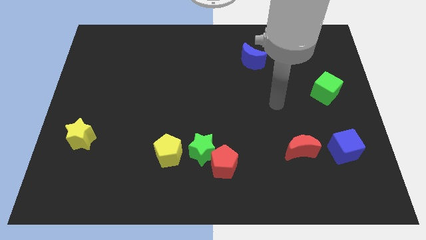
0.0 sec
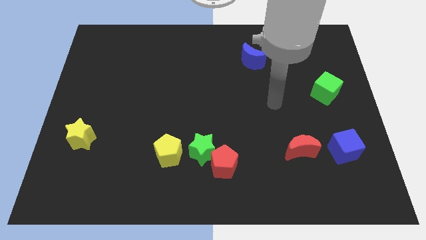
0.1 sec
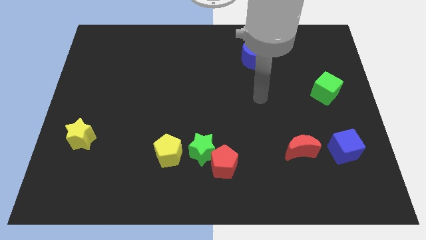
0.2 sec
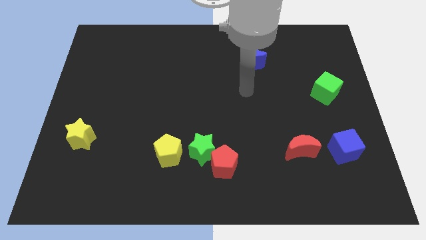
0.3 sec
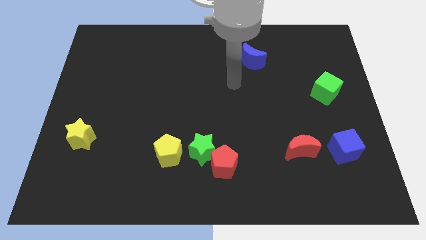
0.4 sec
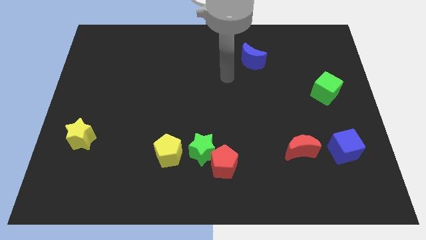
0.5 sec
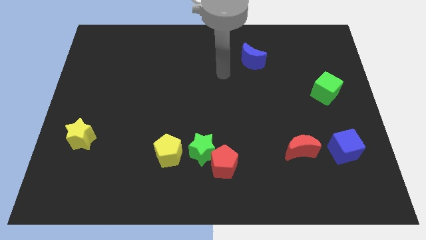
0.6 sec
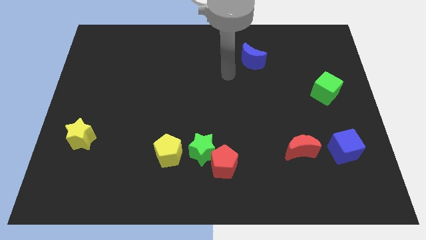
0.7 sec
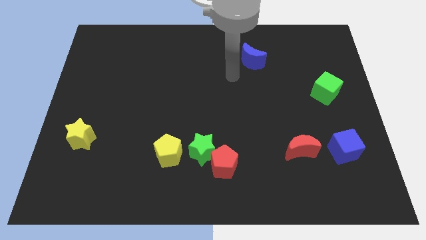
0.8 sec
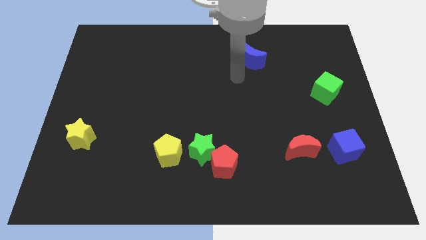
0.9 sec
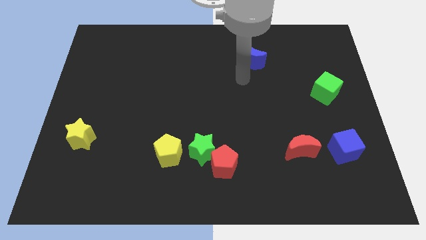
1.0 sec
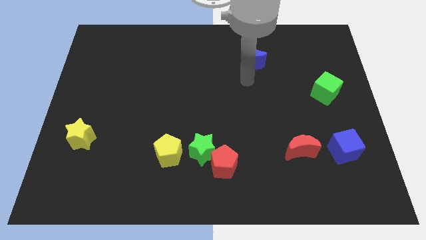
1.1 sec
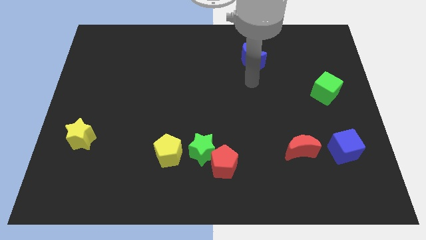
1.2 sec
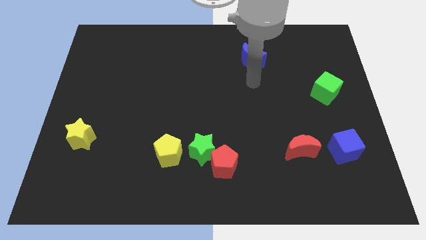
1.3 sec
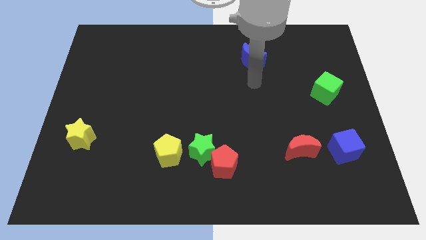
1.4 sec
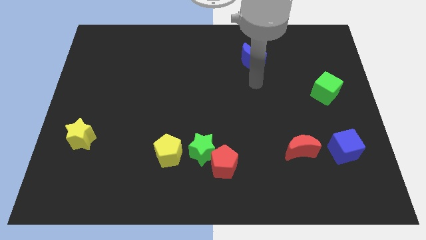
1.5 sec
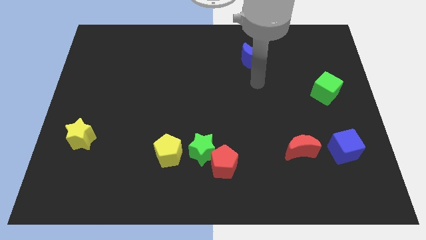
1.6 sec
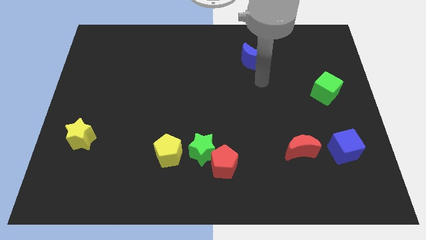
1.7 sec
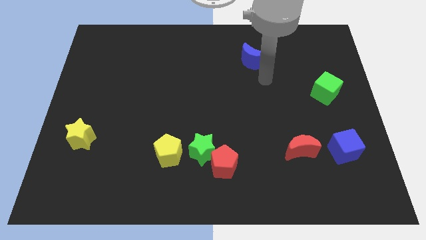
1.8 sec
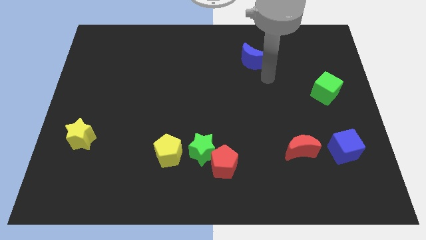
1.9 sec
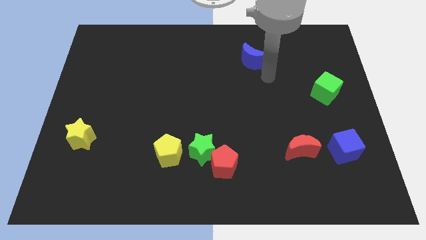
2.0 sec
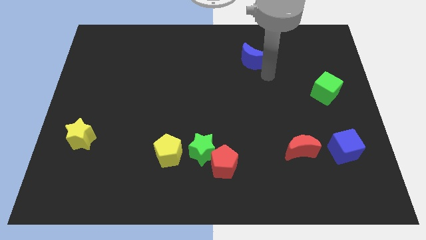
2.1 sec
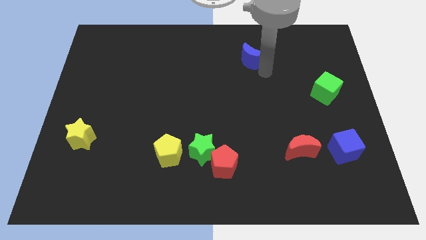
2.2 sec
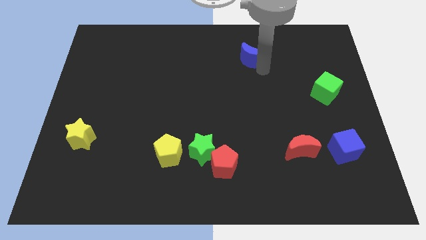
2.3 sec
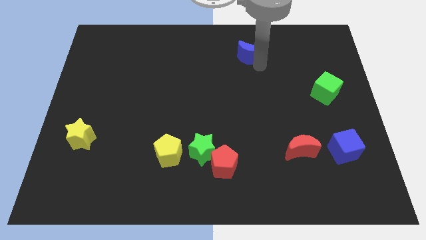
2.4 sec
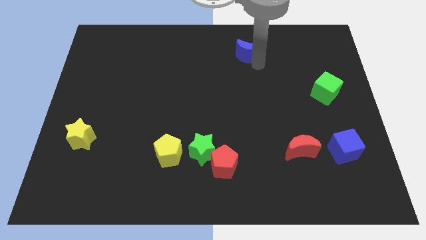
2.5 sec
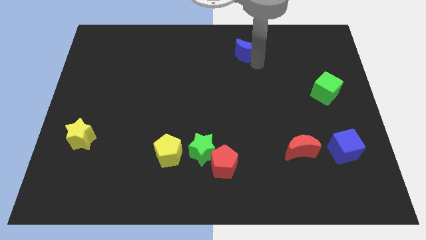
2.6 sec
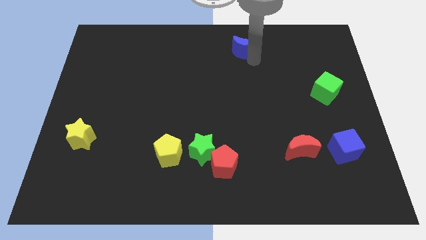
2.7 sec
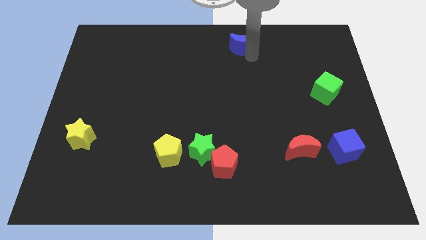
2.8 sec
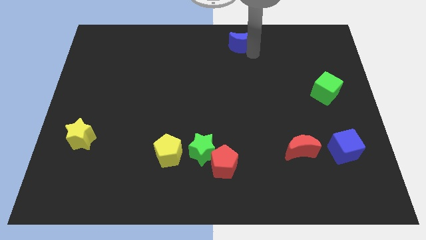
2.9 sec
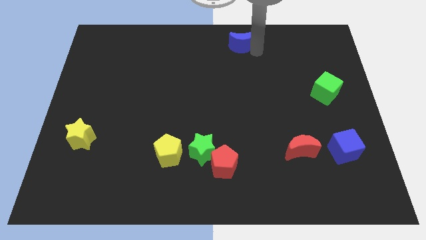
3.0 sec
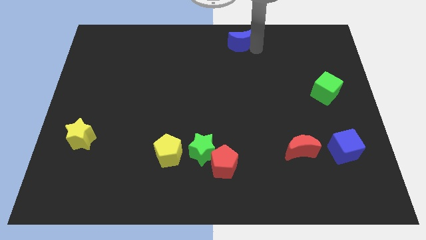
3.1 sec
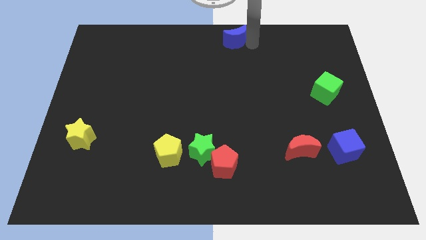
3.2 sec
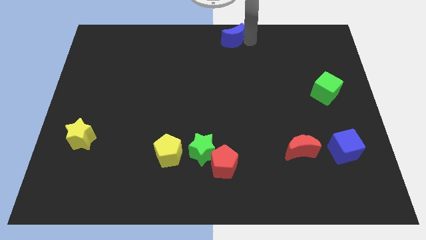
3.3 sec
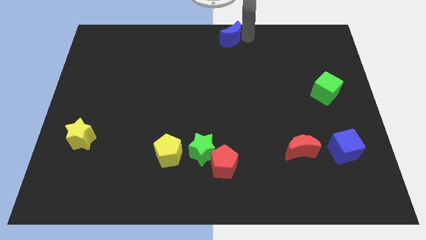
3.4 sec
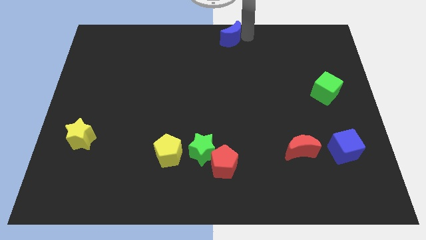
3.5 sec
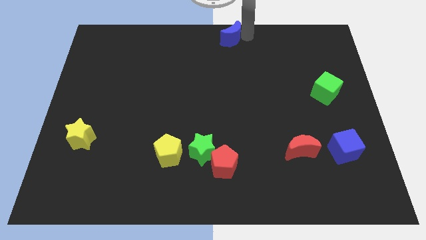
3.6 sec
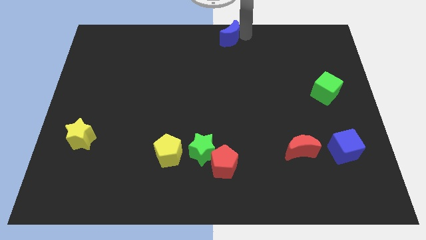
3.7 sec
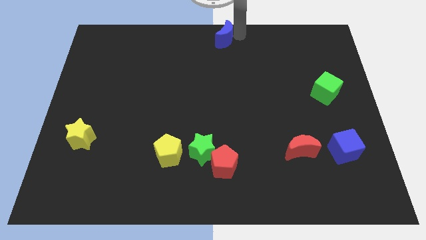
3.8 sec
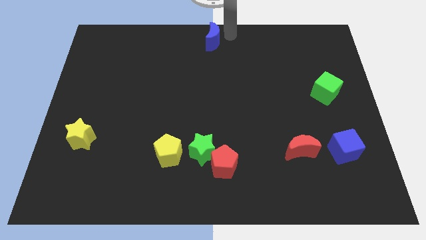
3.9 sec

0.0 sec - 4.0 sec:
move the blue moon towards the top center of the board

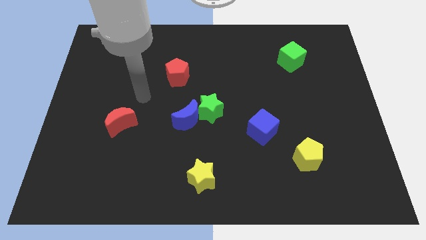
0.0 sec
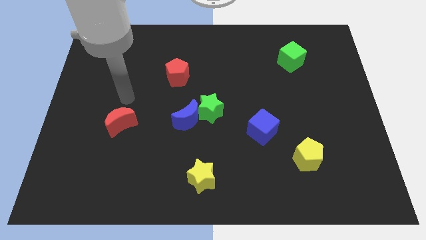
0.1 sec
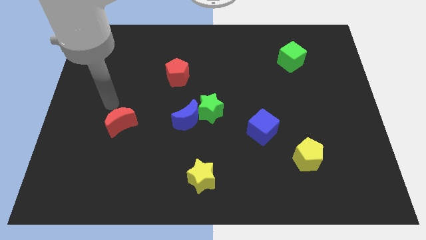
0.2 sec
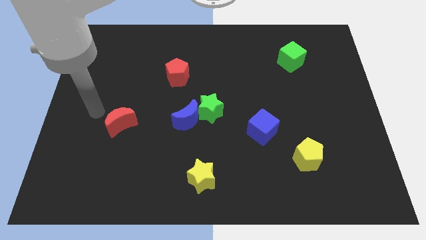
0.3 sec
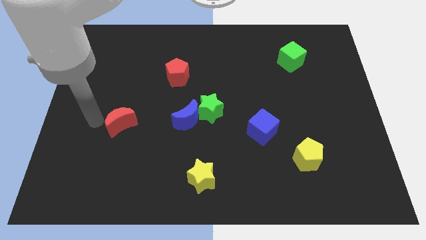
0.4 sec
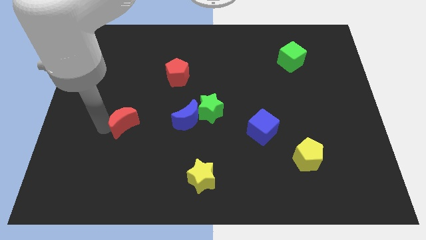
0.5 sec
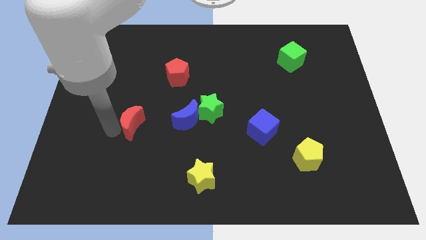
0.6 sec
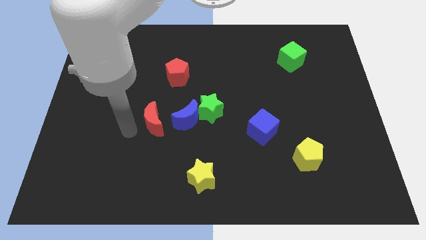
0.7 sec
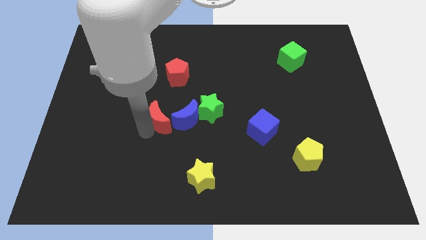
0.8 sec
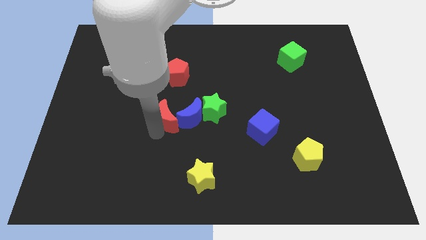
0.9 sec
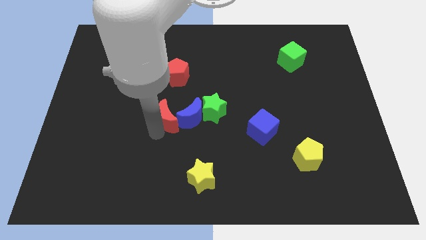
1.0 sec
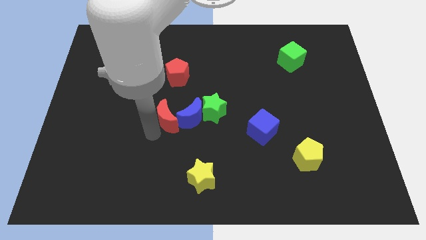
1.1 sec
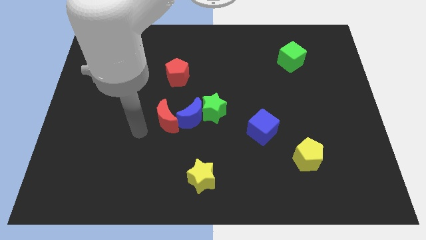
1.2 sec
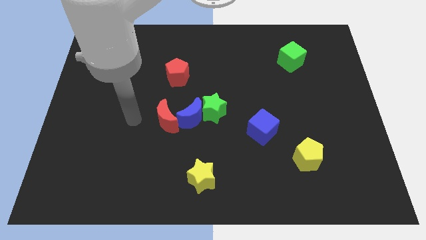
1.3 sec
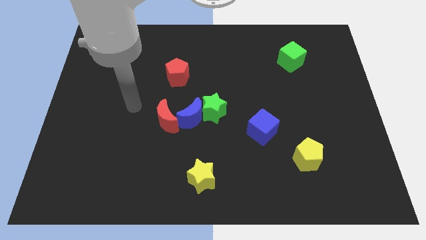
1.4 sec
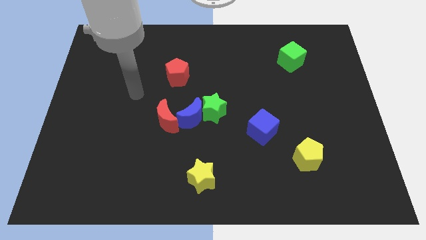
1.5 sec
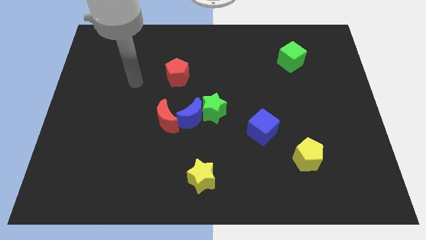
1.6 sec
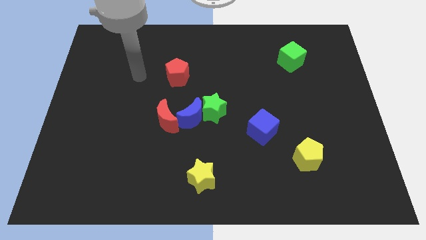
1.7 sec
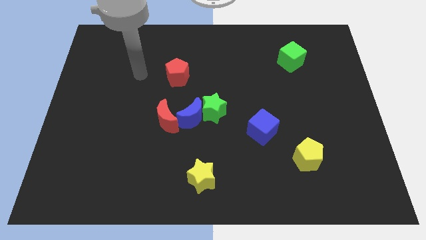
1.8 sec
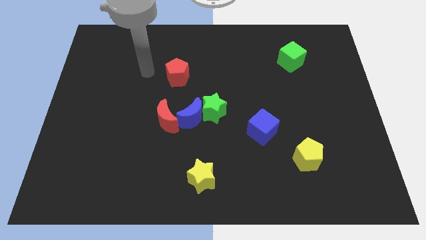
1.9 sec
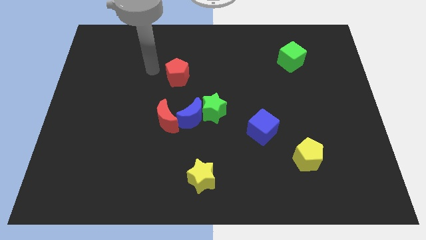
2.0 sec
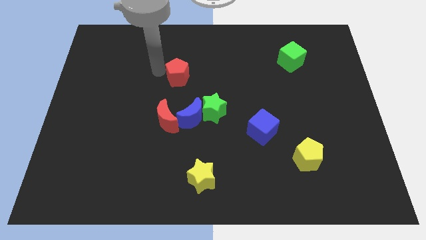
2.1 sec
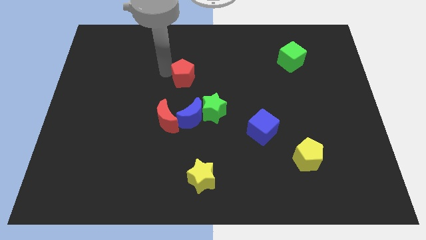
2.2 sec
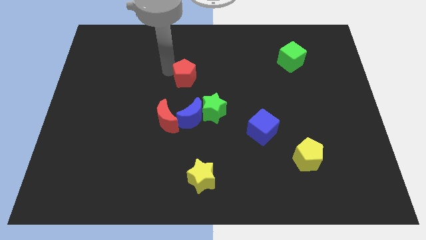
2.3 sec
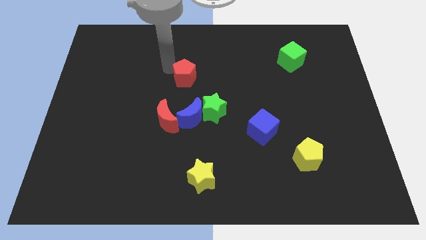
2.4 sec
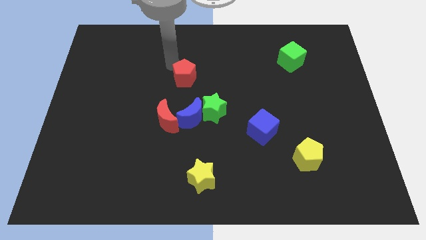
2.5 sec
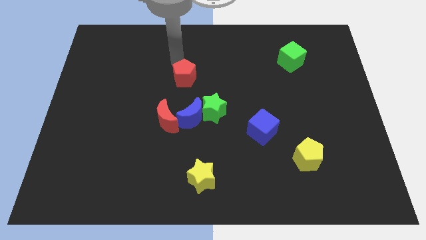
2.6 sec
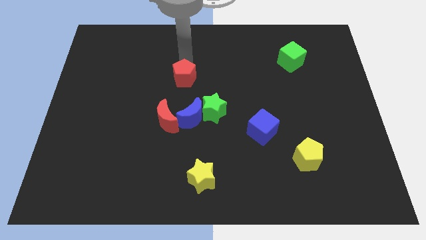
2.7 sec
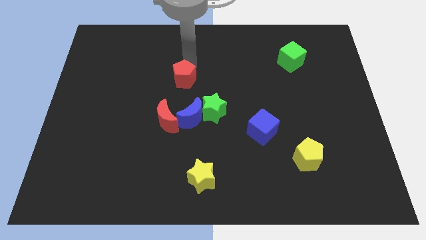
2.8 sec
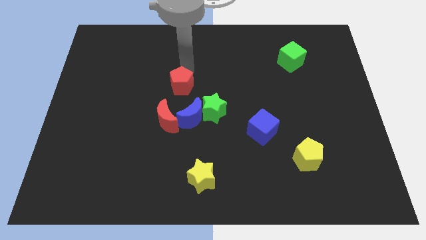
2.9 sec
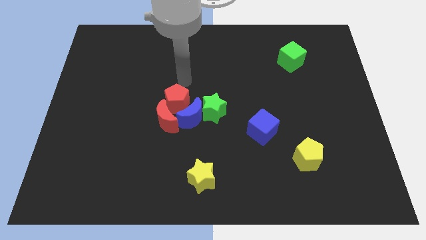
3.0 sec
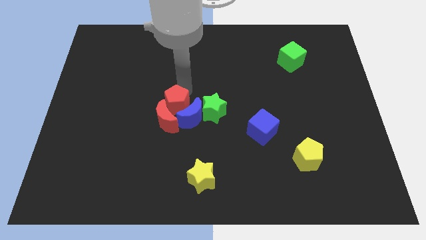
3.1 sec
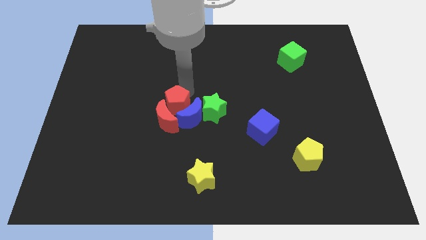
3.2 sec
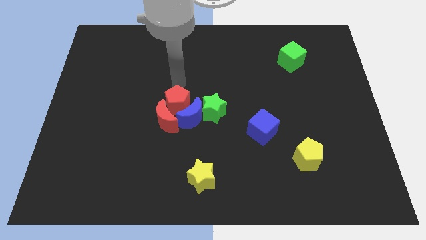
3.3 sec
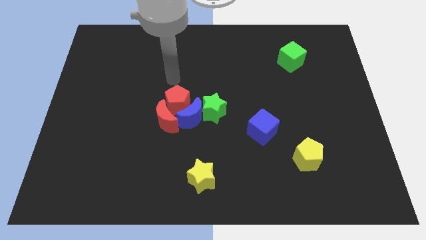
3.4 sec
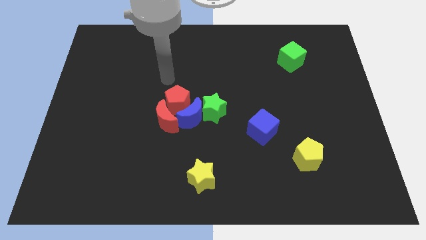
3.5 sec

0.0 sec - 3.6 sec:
push the red blocks into the blue crescent

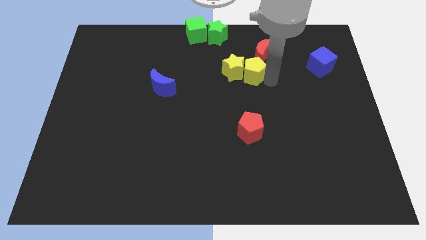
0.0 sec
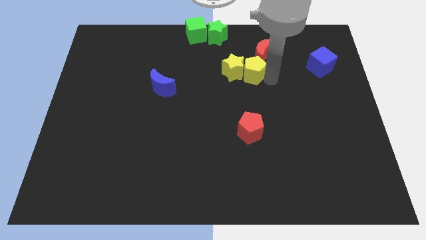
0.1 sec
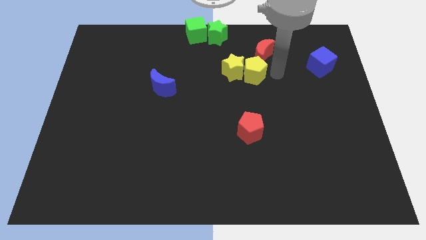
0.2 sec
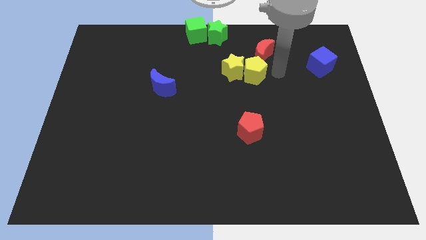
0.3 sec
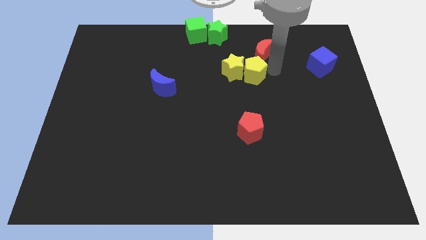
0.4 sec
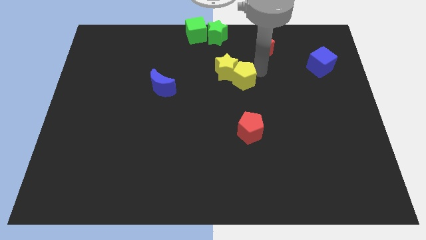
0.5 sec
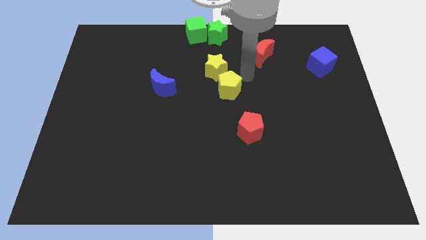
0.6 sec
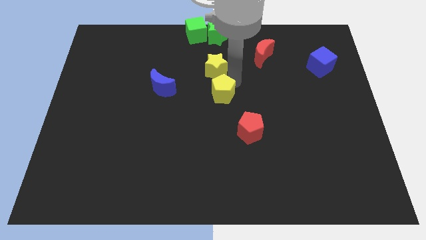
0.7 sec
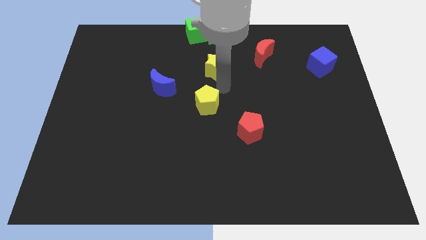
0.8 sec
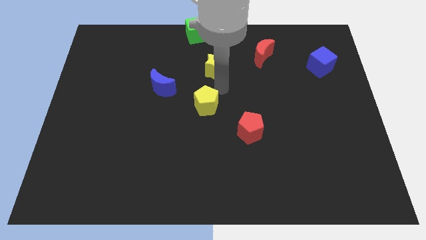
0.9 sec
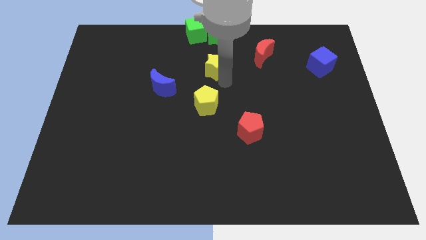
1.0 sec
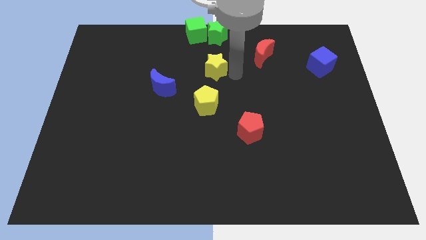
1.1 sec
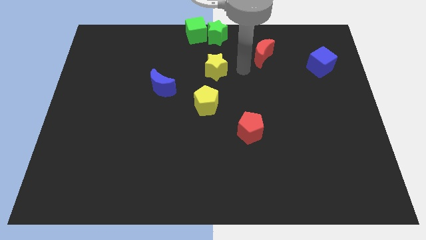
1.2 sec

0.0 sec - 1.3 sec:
move the yellow pentagon to the the bottom center of the board

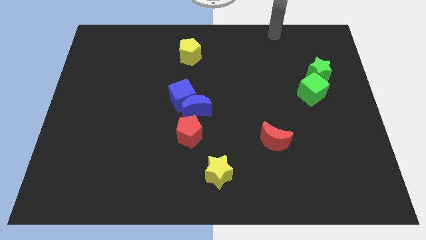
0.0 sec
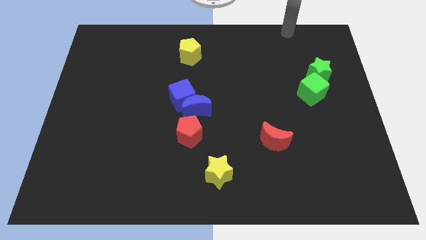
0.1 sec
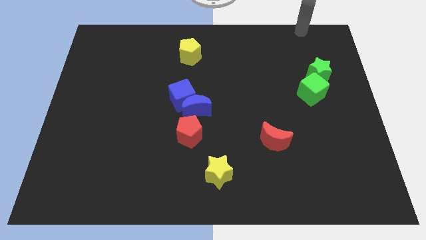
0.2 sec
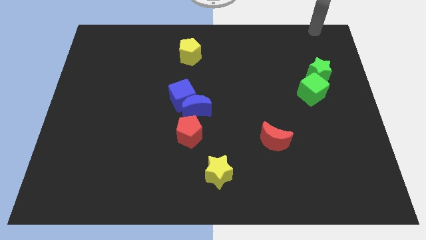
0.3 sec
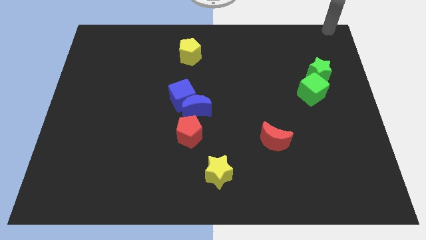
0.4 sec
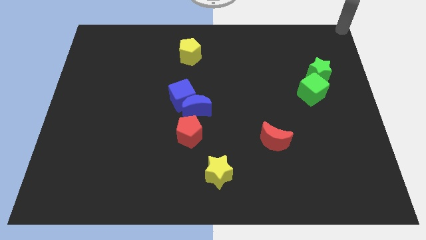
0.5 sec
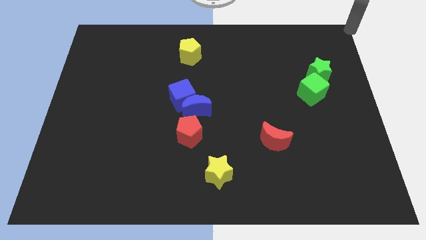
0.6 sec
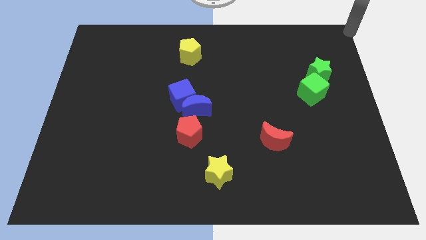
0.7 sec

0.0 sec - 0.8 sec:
move your hand to the top right corner of the board
